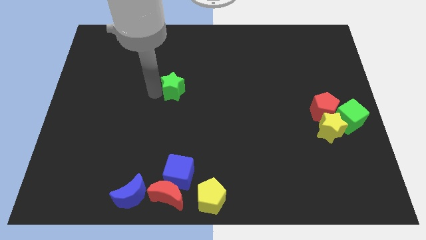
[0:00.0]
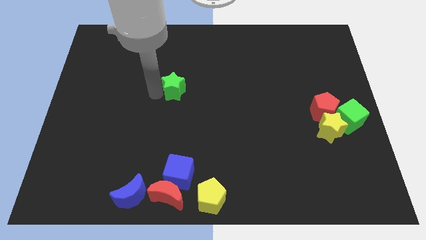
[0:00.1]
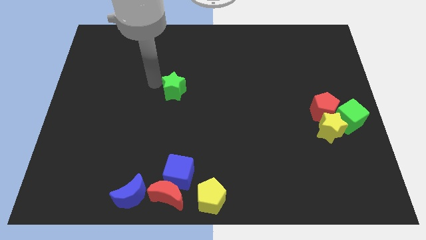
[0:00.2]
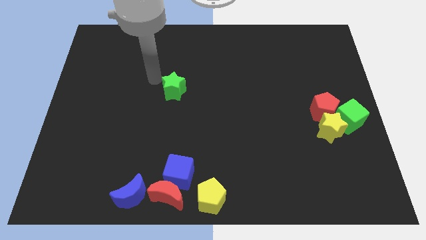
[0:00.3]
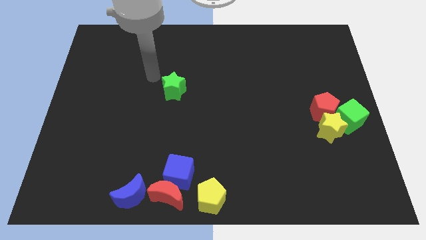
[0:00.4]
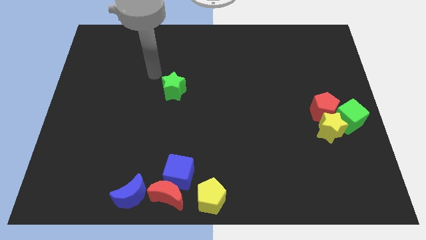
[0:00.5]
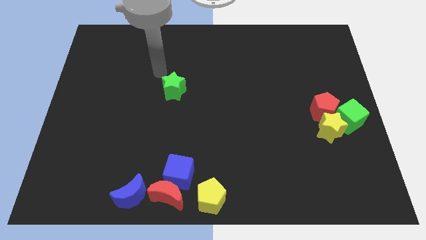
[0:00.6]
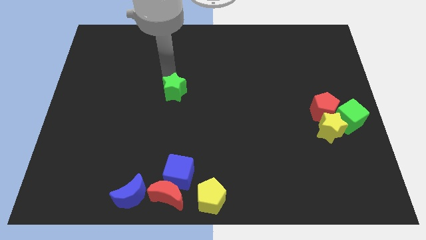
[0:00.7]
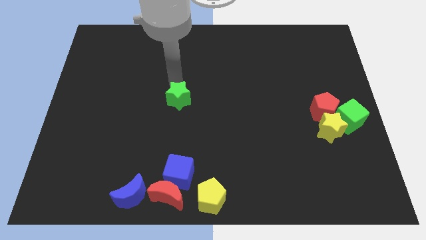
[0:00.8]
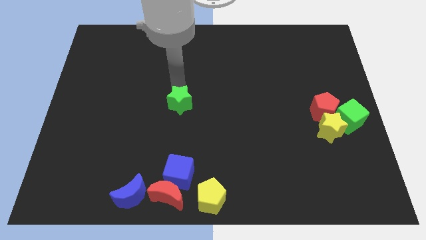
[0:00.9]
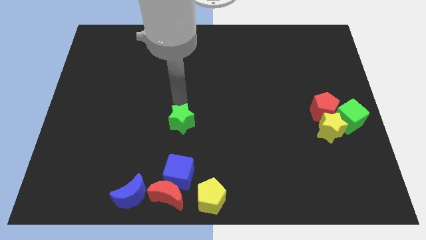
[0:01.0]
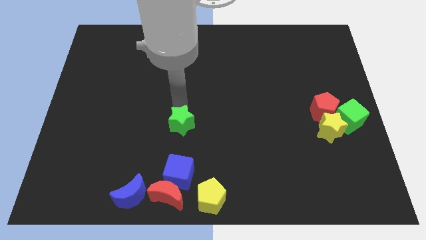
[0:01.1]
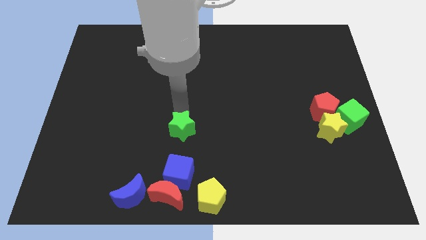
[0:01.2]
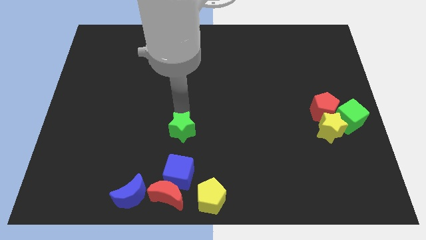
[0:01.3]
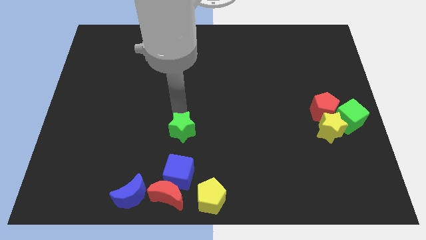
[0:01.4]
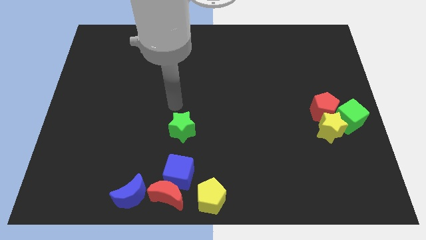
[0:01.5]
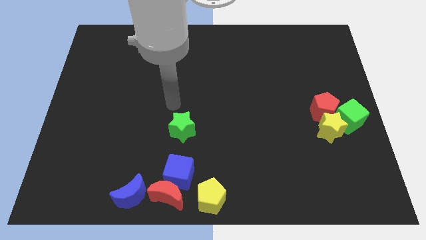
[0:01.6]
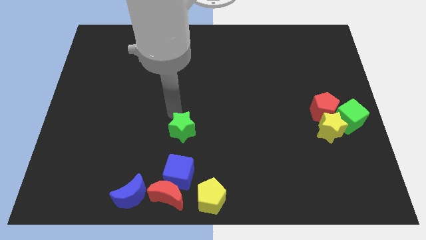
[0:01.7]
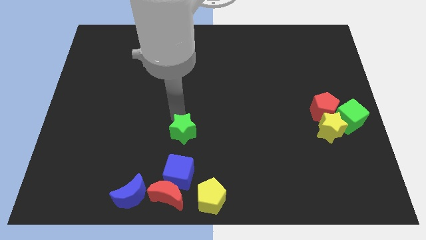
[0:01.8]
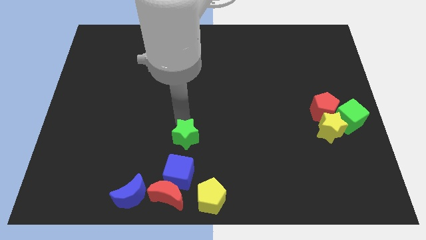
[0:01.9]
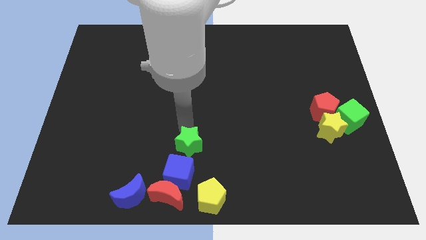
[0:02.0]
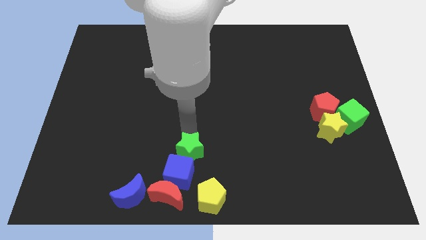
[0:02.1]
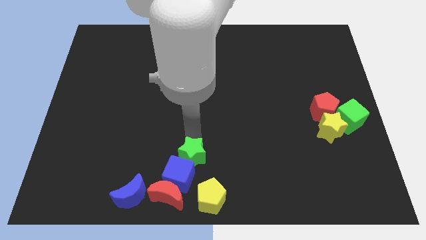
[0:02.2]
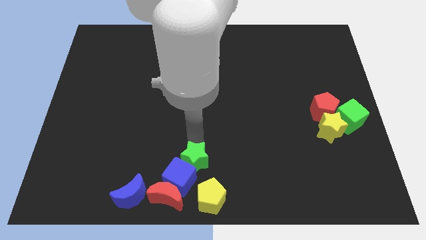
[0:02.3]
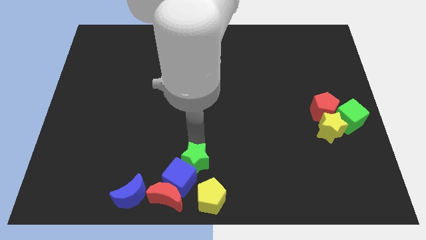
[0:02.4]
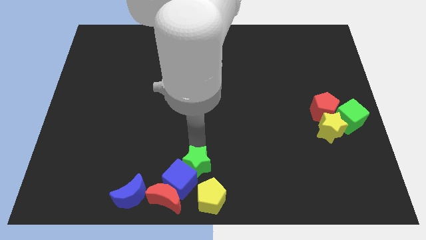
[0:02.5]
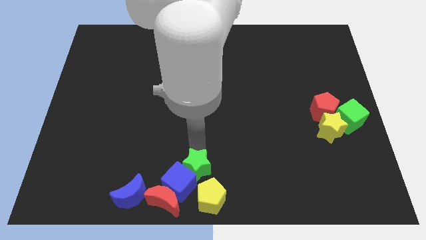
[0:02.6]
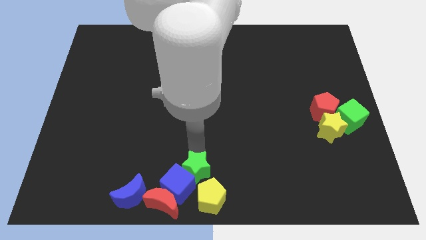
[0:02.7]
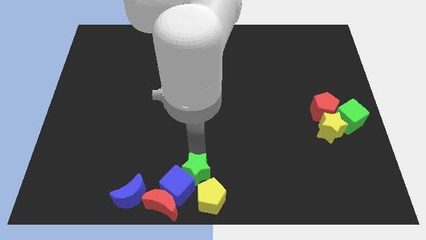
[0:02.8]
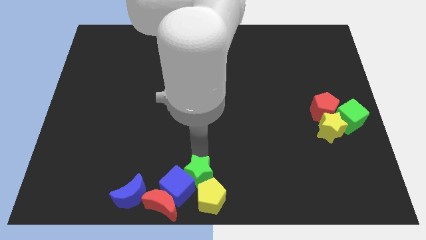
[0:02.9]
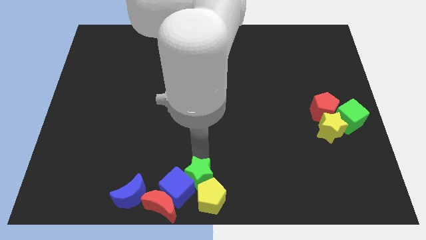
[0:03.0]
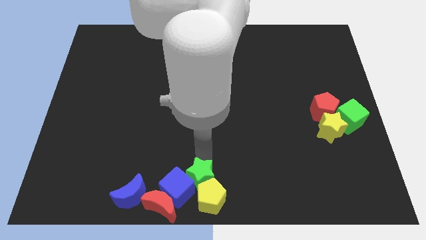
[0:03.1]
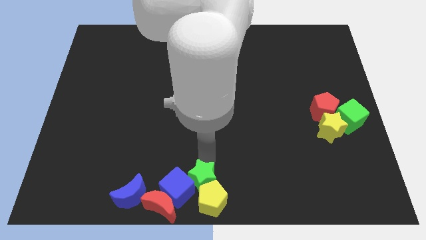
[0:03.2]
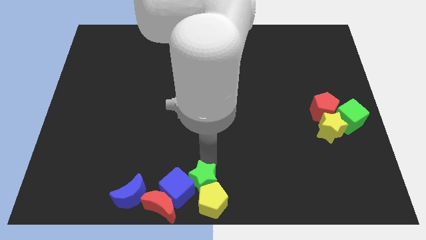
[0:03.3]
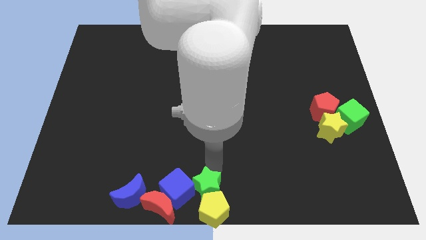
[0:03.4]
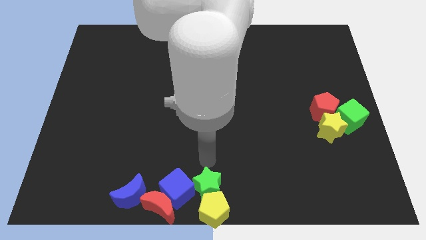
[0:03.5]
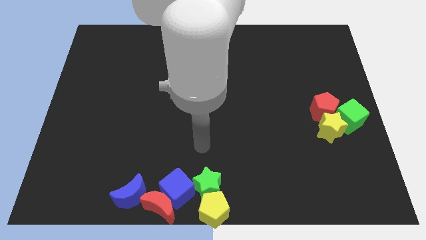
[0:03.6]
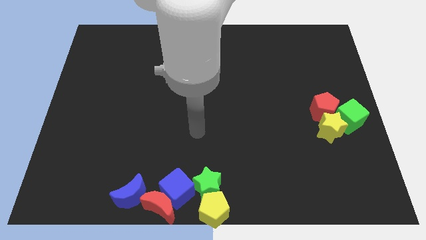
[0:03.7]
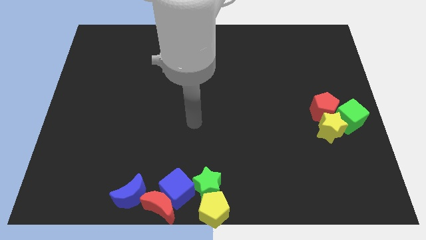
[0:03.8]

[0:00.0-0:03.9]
push the green star into the yellow pentagon

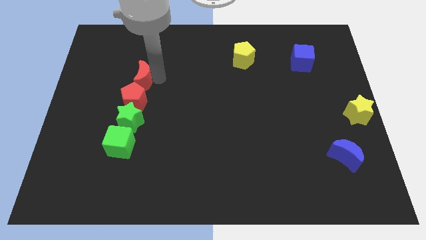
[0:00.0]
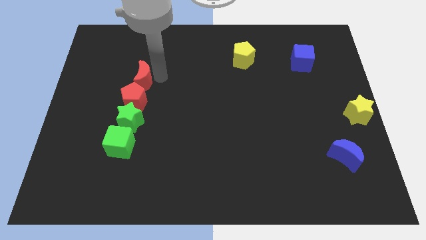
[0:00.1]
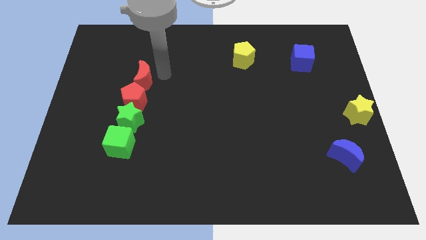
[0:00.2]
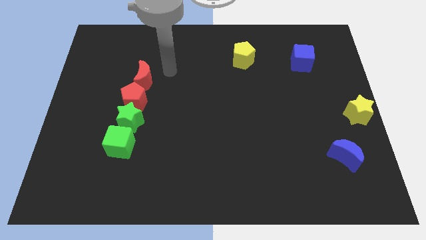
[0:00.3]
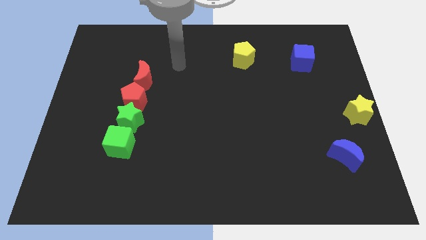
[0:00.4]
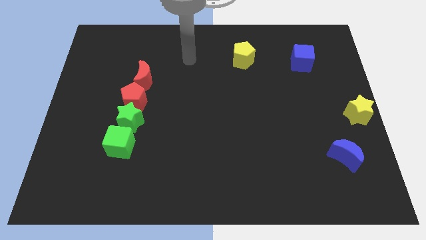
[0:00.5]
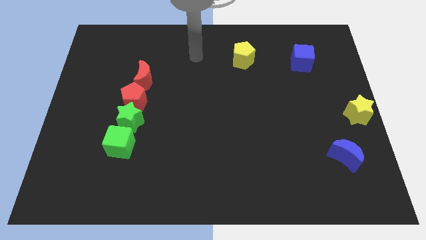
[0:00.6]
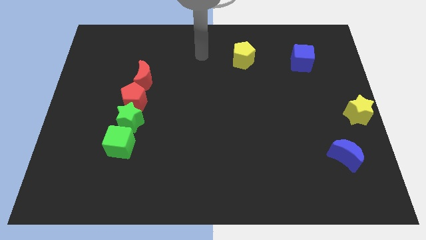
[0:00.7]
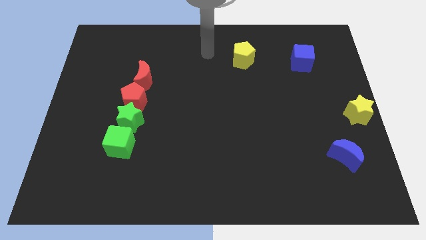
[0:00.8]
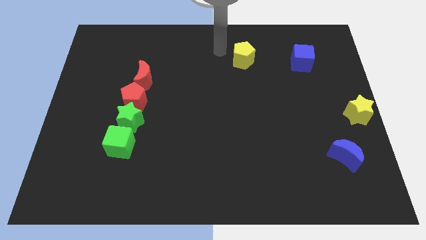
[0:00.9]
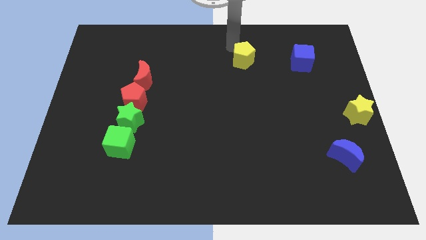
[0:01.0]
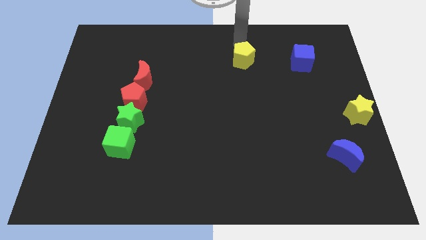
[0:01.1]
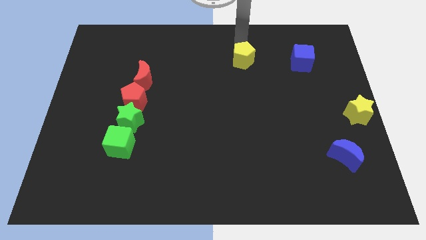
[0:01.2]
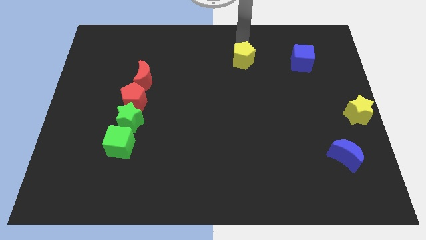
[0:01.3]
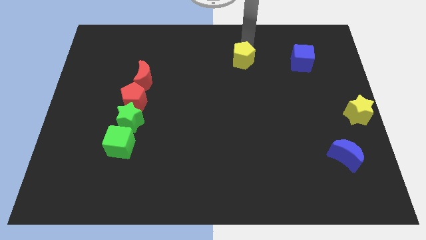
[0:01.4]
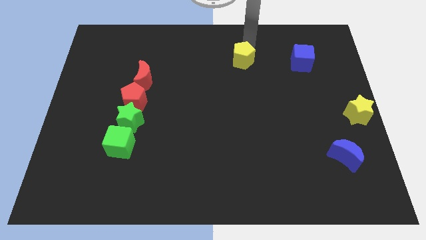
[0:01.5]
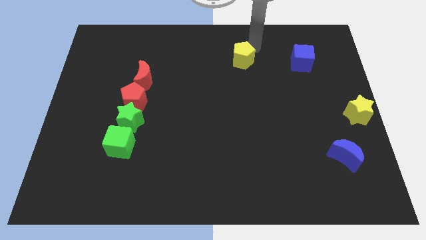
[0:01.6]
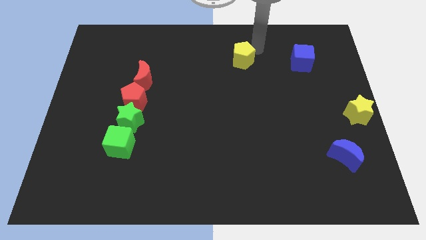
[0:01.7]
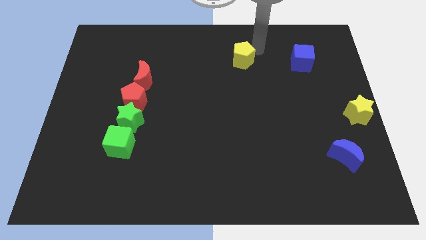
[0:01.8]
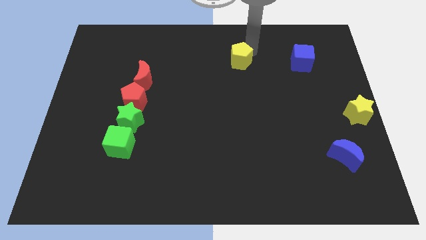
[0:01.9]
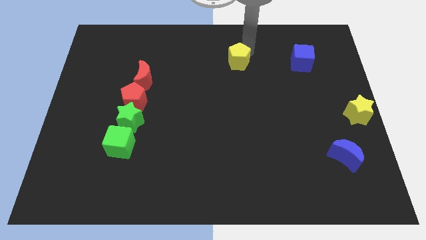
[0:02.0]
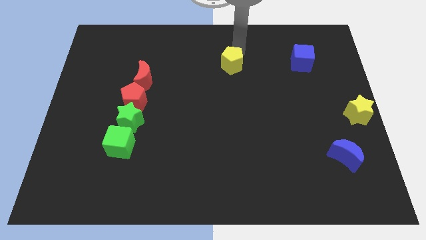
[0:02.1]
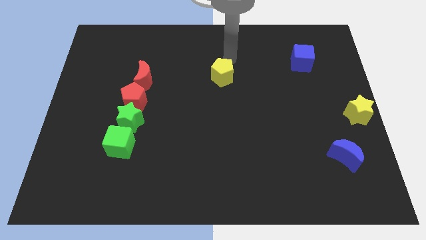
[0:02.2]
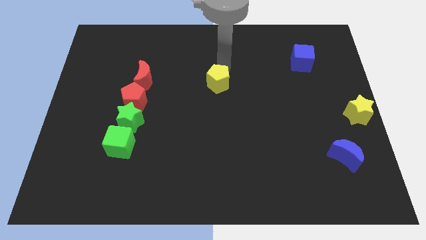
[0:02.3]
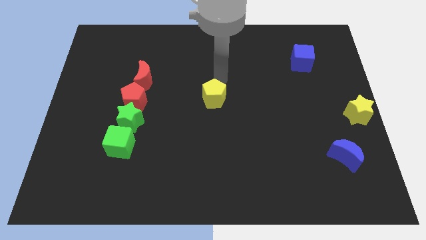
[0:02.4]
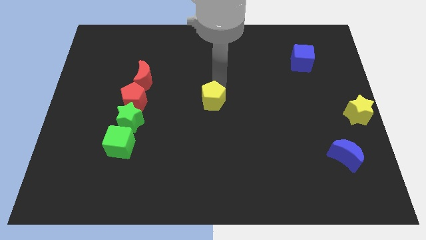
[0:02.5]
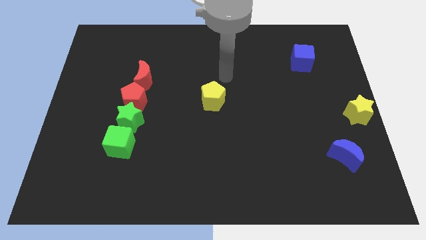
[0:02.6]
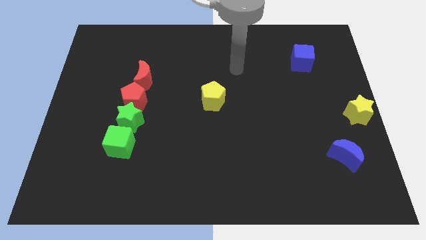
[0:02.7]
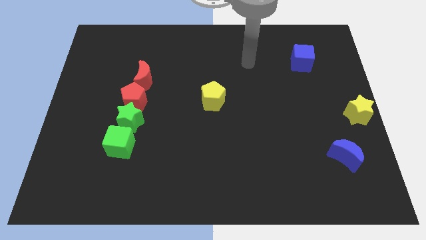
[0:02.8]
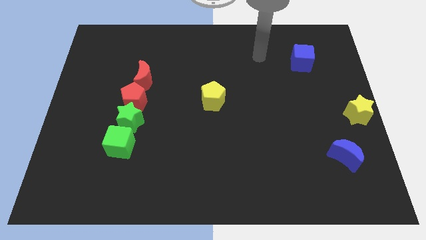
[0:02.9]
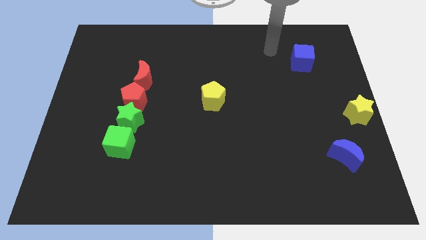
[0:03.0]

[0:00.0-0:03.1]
push the yellow pentagon towards the center of the board

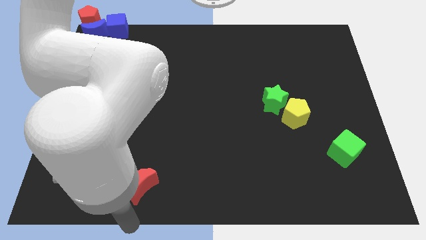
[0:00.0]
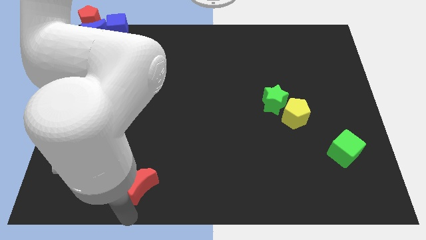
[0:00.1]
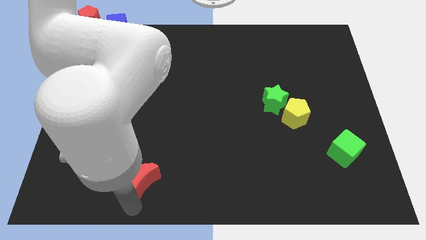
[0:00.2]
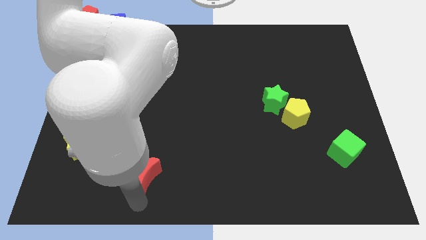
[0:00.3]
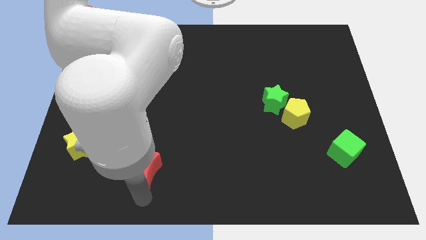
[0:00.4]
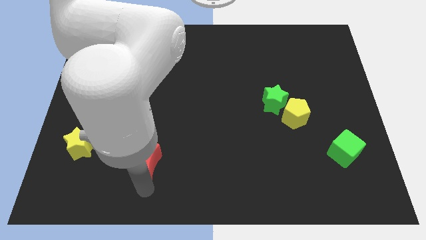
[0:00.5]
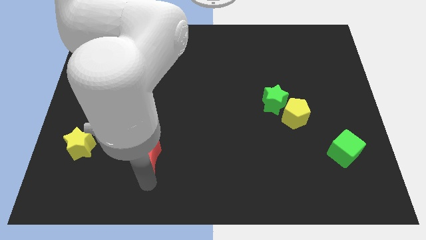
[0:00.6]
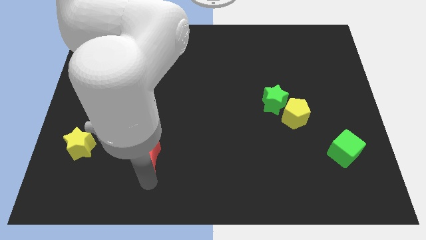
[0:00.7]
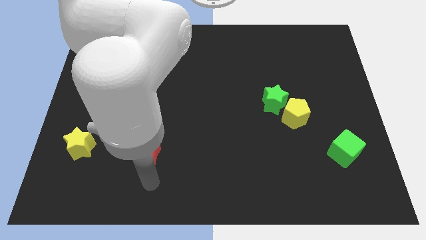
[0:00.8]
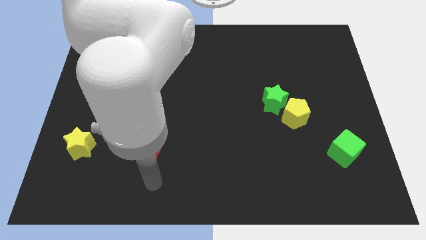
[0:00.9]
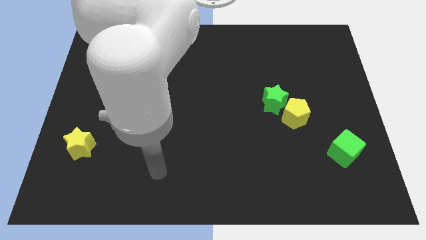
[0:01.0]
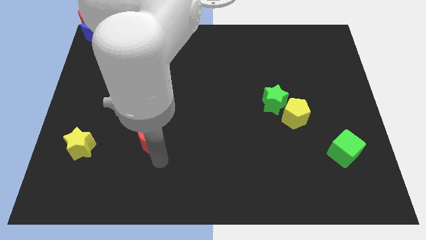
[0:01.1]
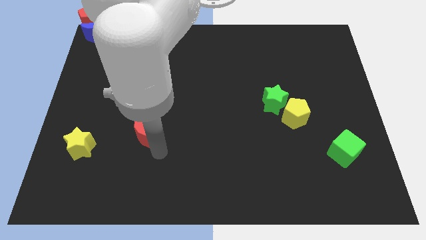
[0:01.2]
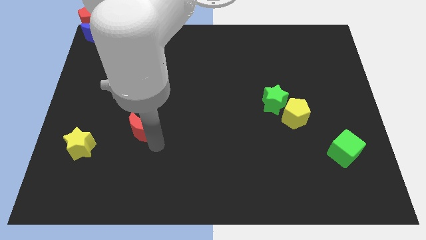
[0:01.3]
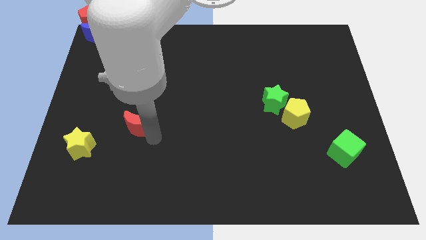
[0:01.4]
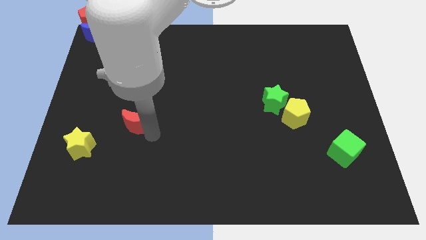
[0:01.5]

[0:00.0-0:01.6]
place the red moon diagonally in between green star and yellow star
